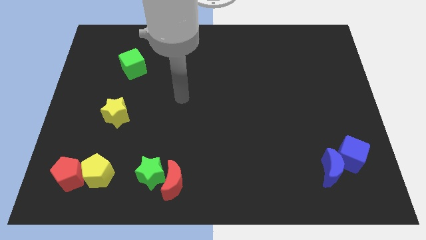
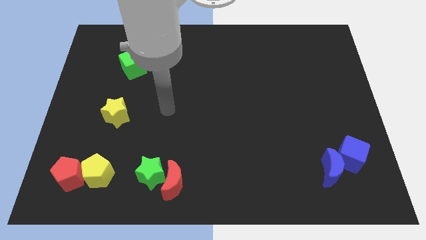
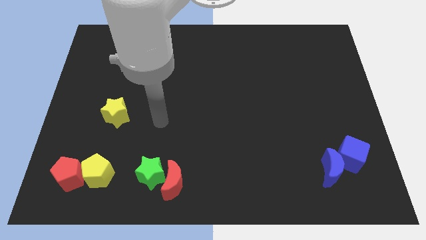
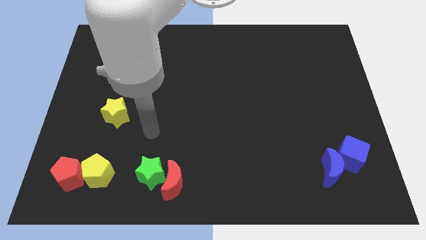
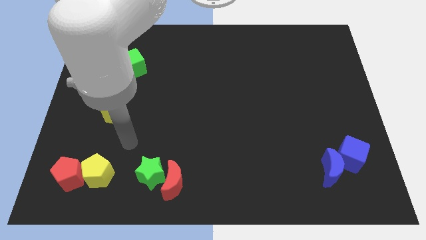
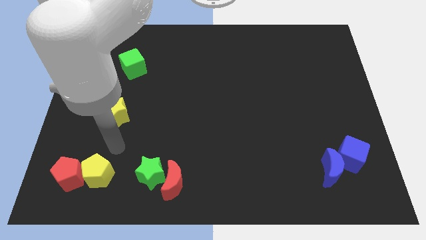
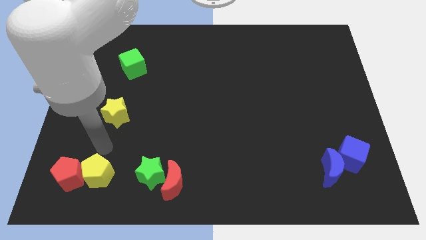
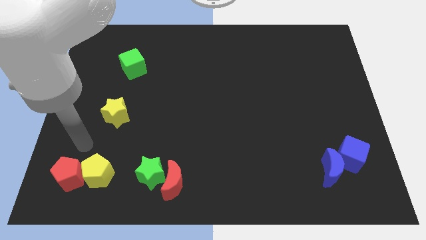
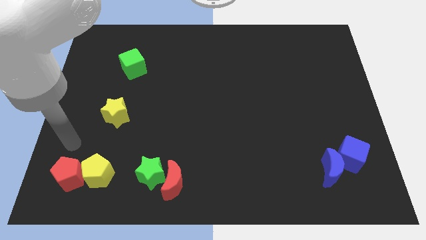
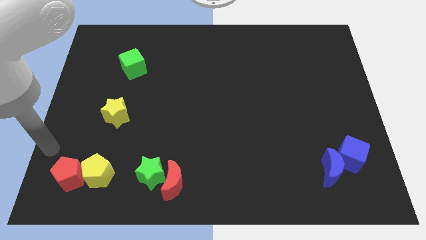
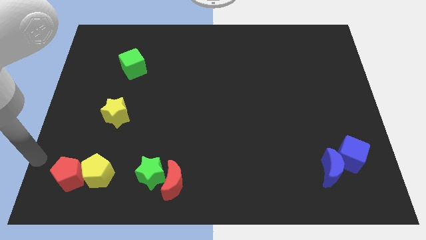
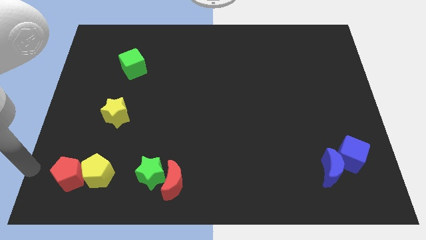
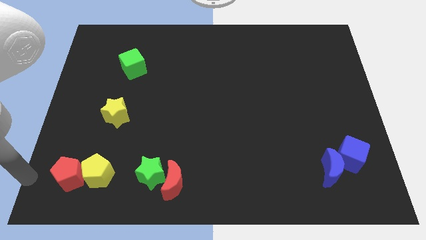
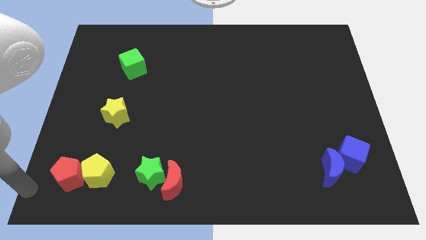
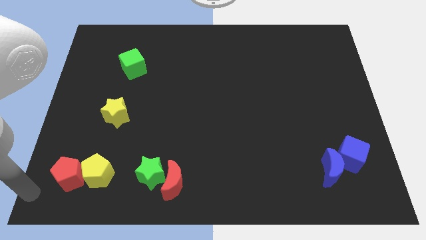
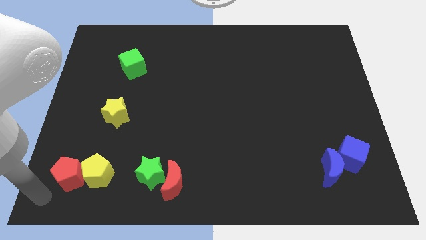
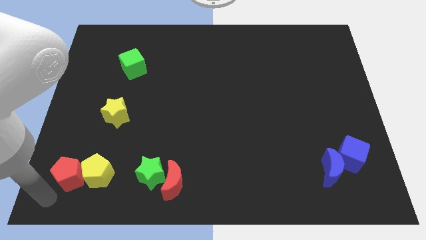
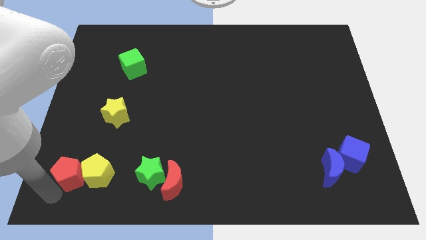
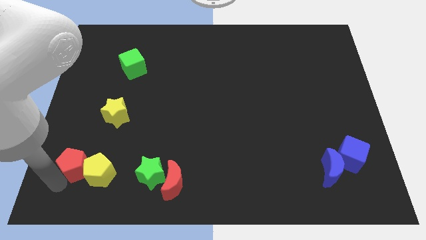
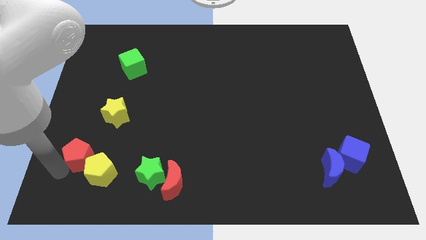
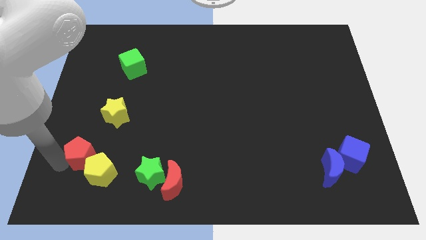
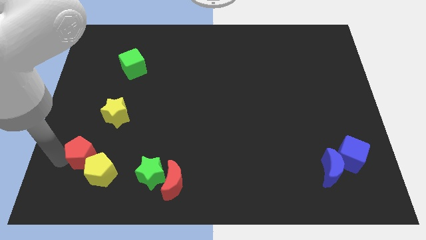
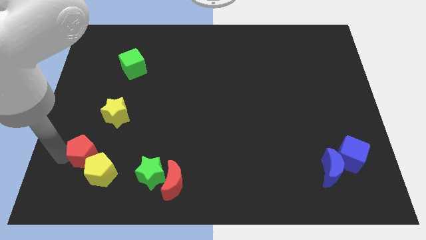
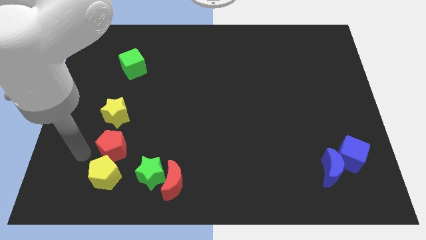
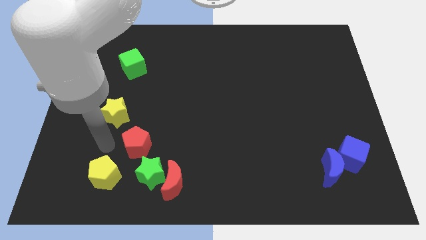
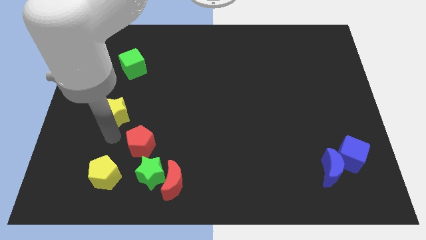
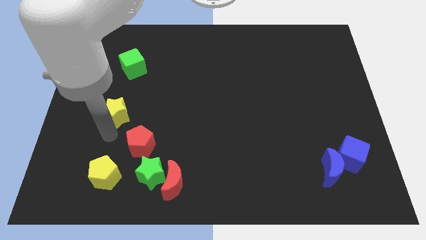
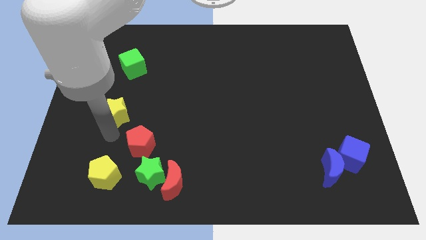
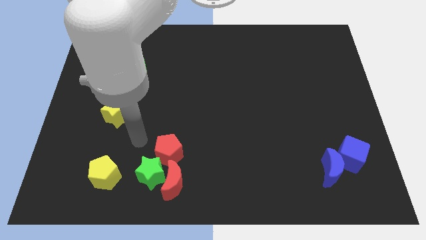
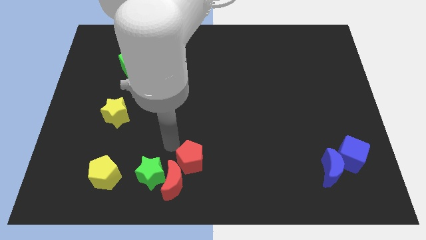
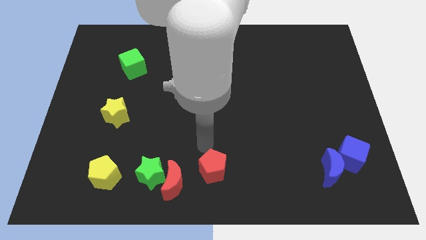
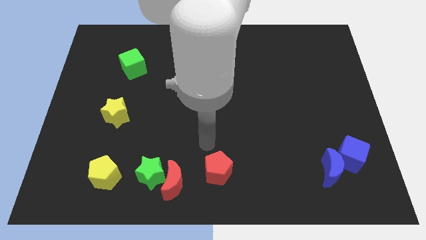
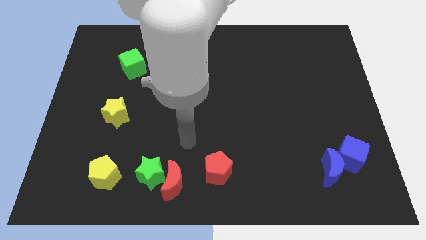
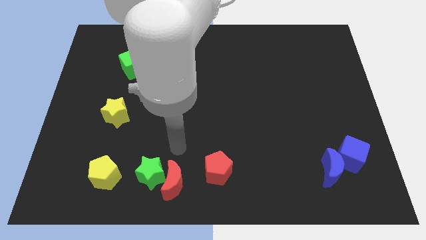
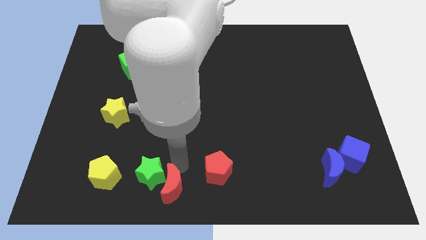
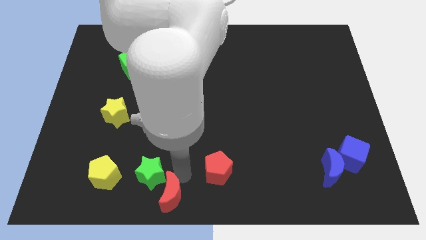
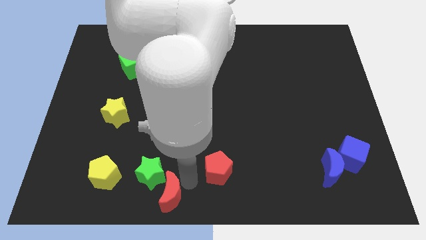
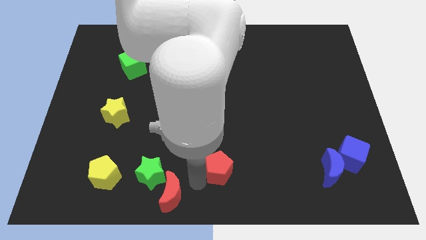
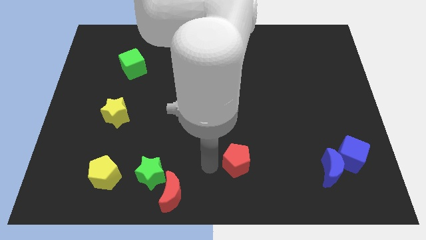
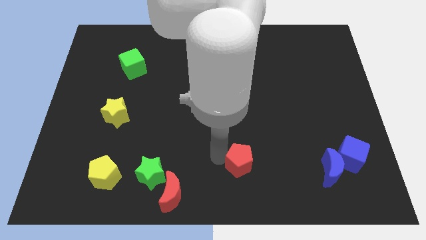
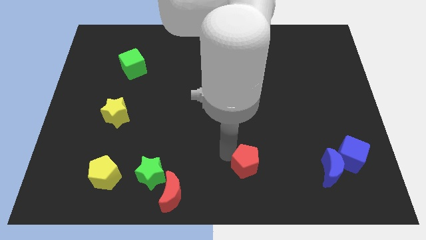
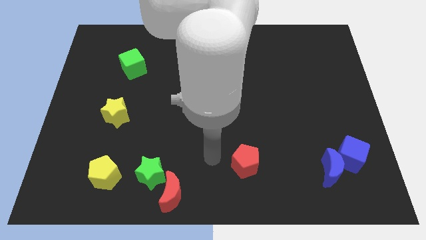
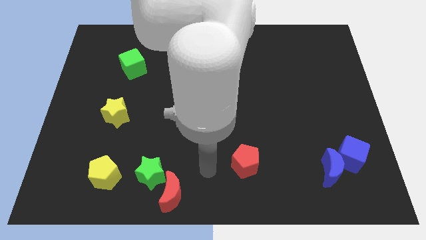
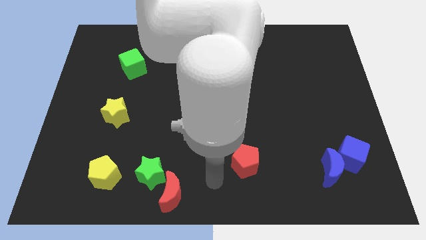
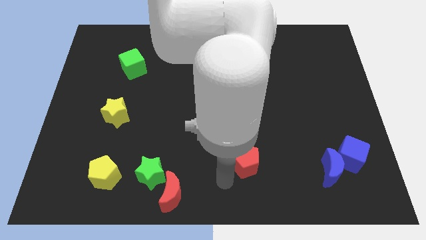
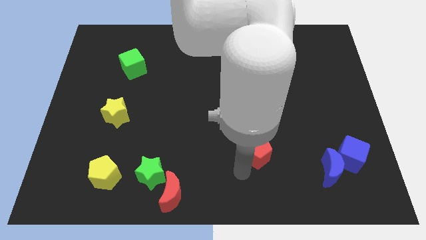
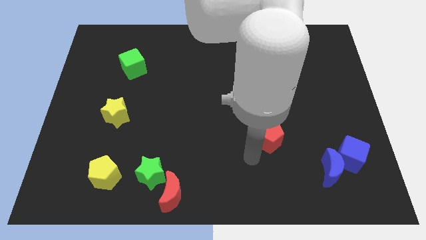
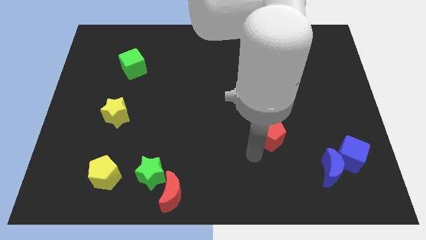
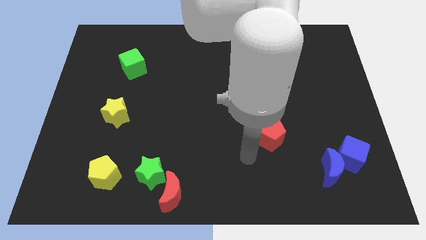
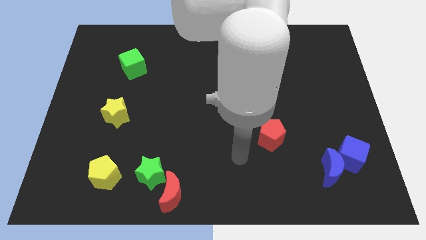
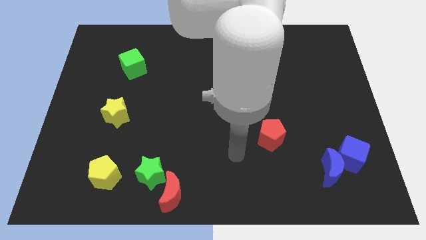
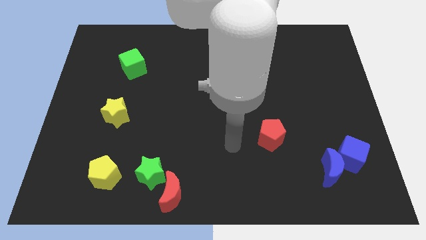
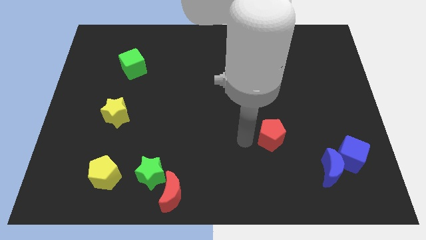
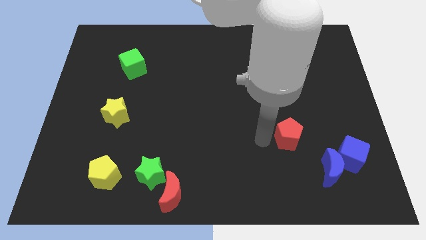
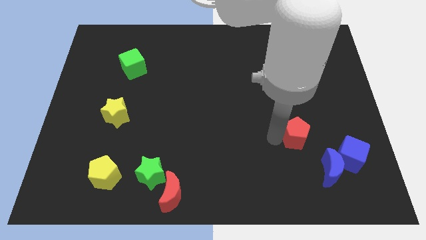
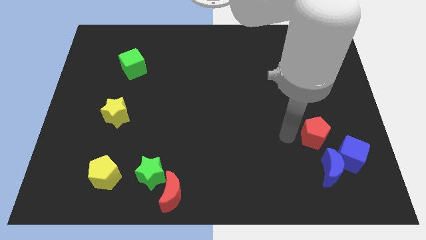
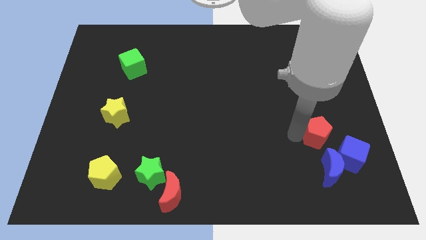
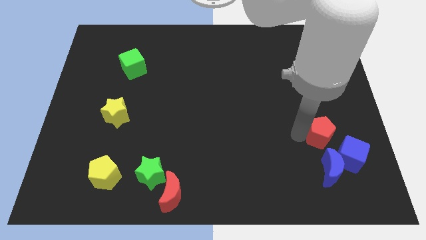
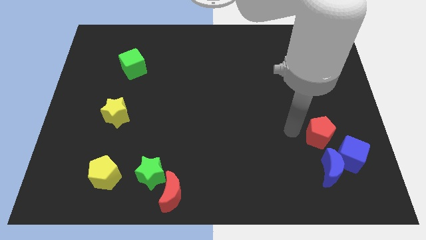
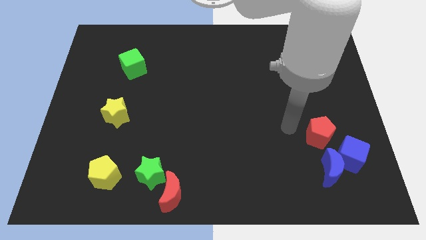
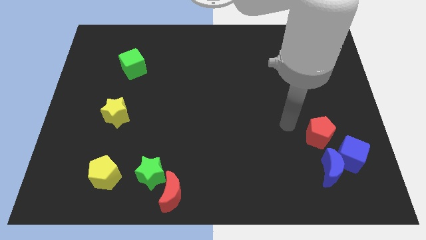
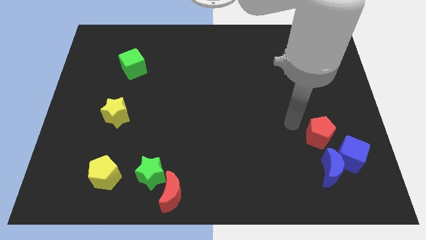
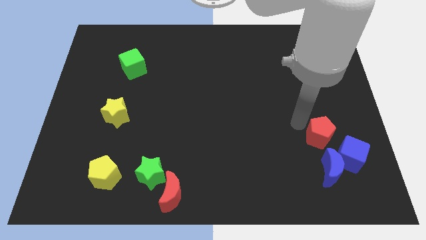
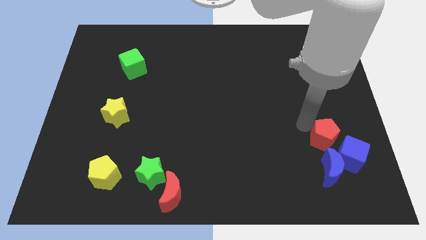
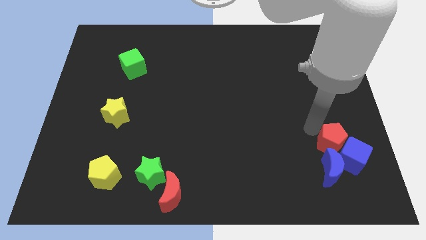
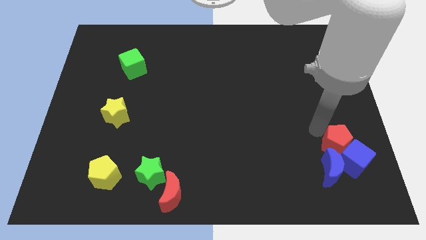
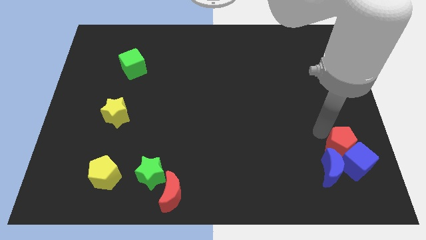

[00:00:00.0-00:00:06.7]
put the red pentagon towards the blue cube

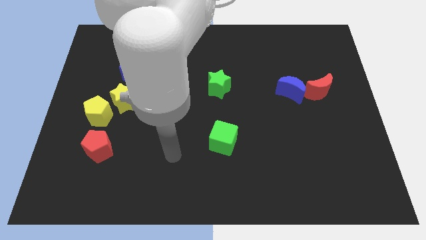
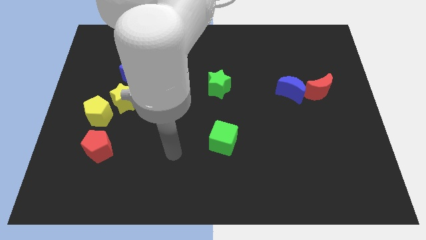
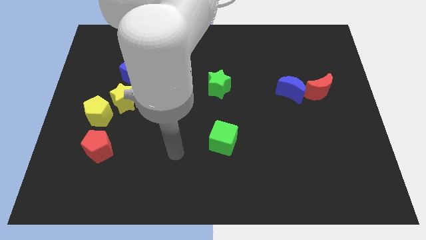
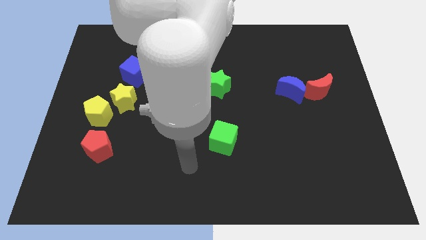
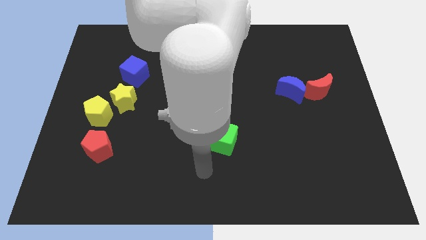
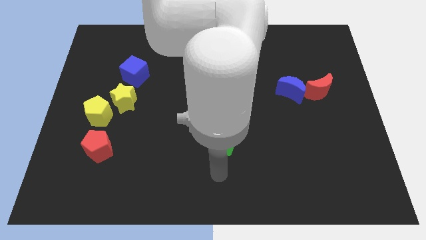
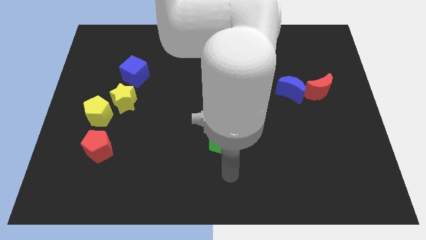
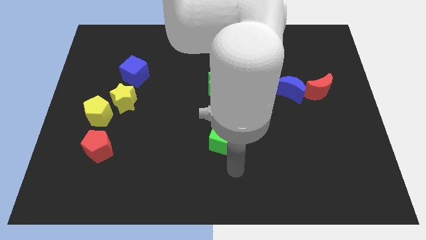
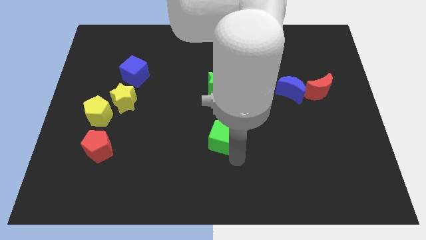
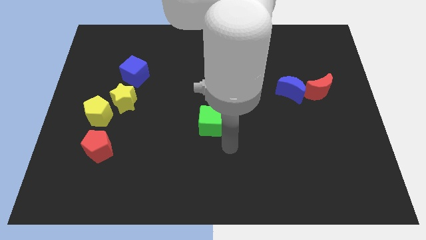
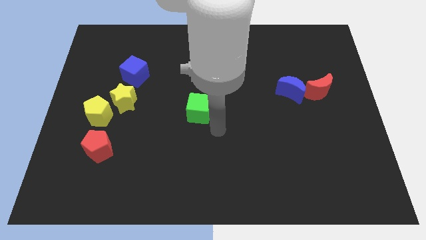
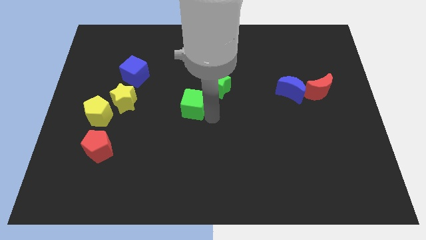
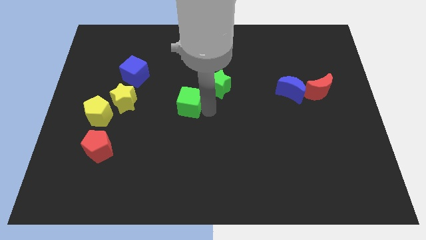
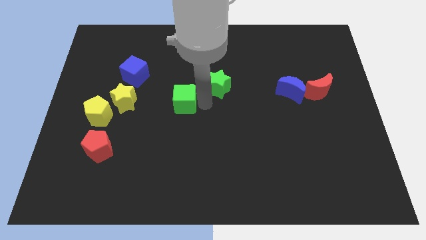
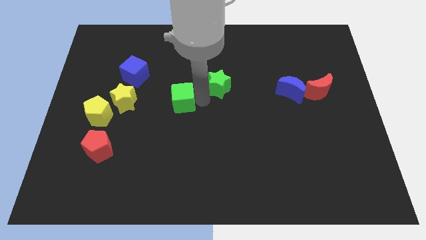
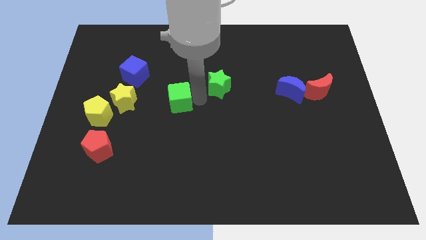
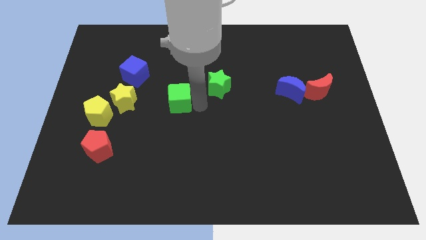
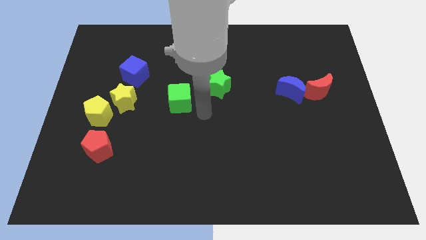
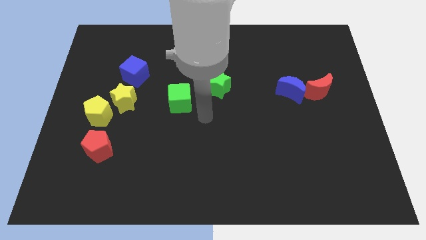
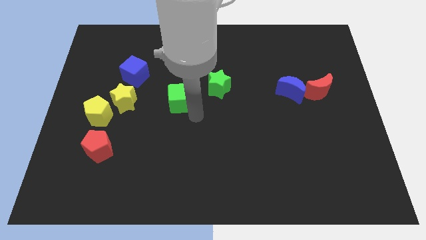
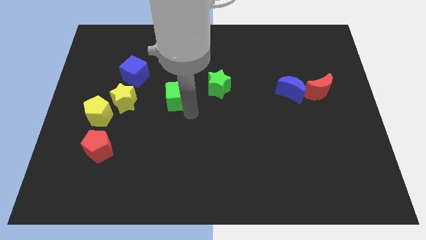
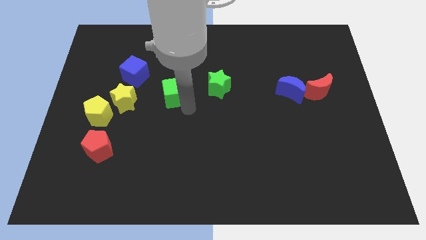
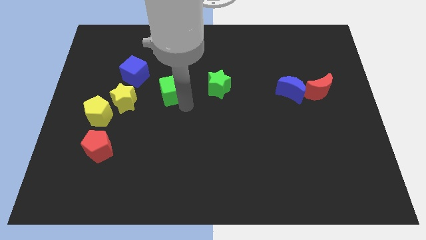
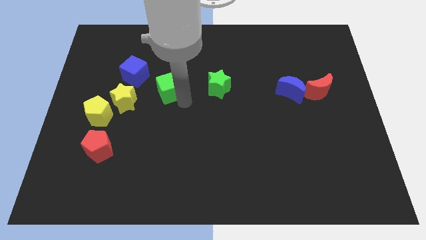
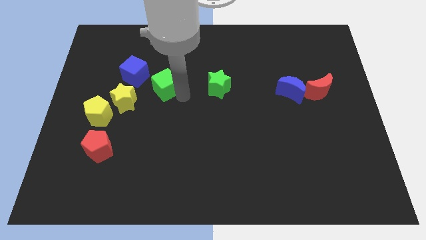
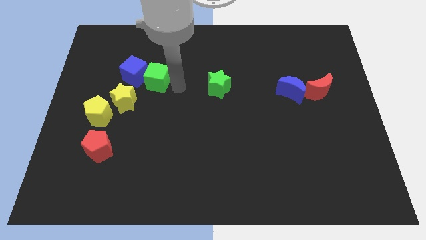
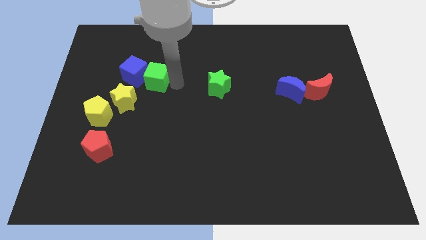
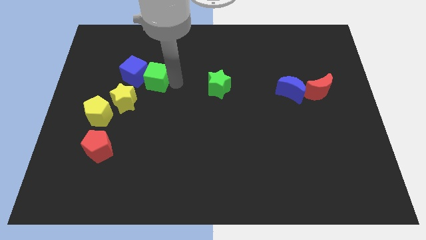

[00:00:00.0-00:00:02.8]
move the green cube next to the blue cube
